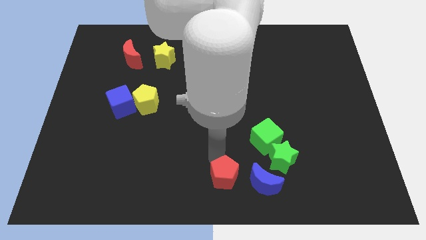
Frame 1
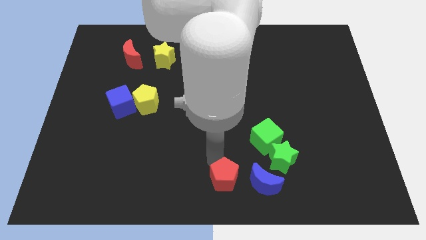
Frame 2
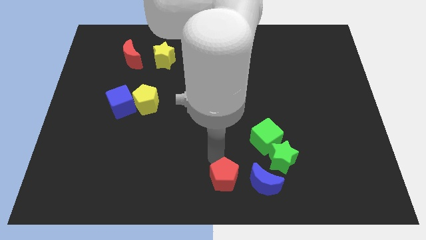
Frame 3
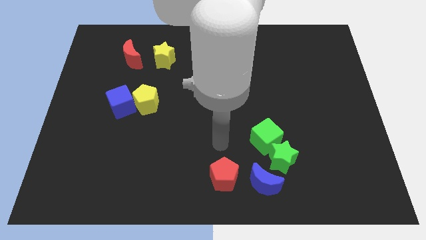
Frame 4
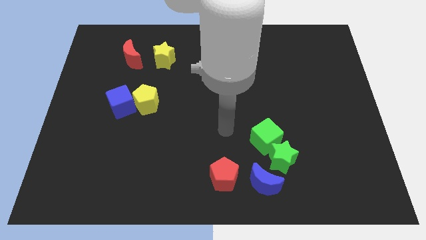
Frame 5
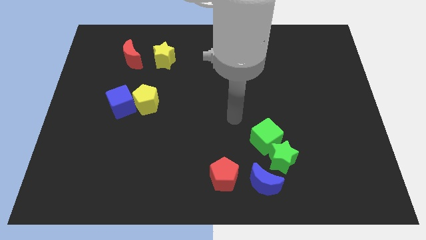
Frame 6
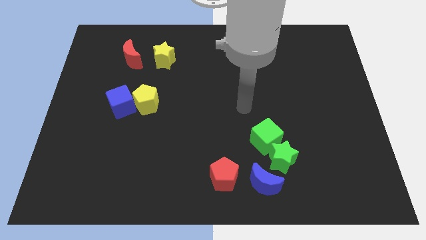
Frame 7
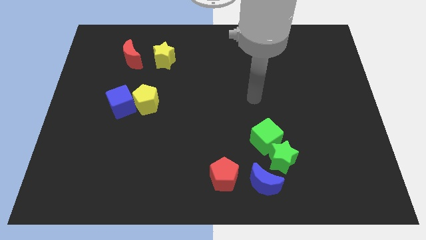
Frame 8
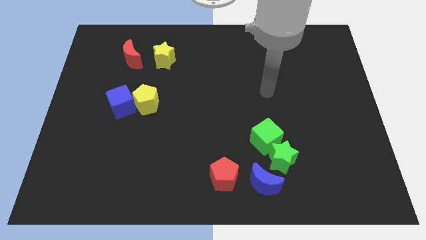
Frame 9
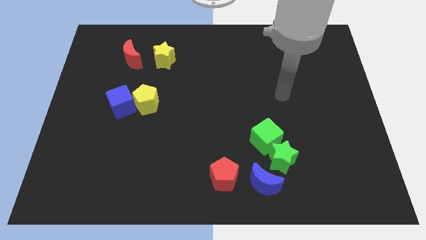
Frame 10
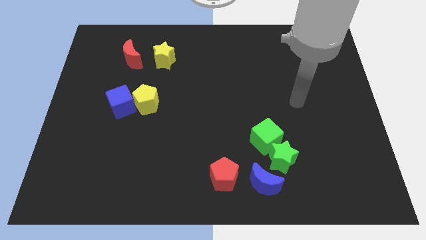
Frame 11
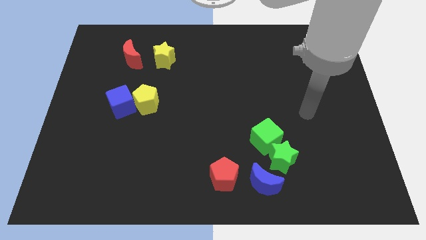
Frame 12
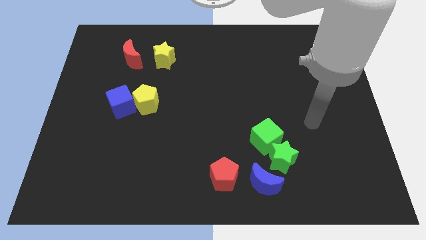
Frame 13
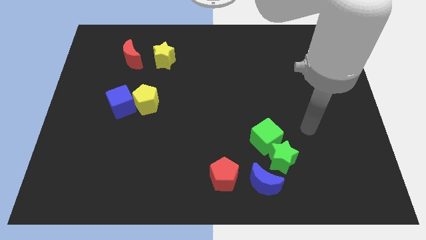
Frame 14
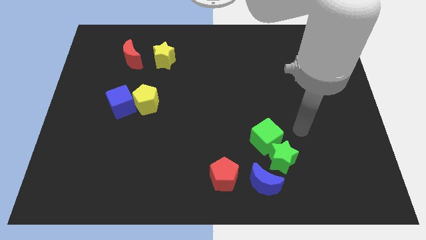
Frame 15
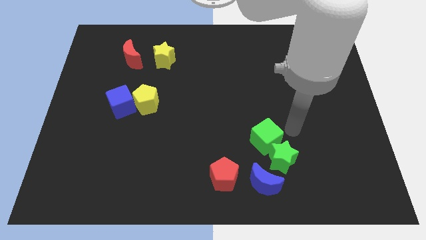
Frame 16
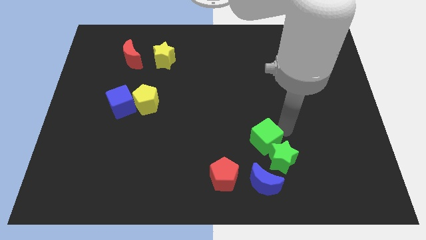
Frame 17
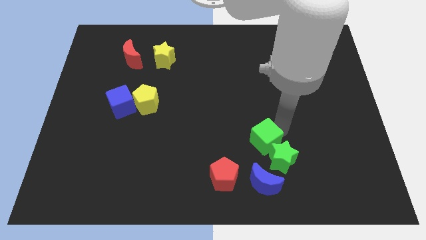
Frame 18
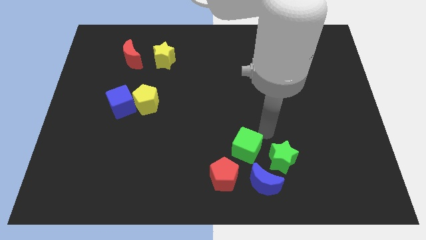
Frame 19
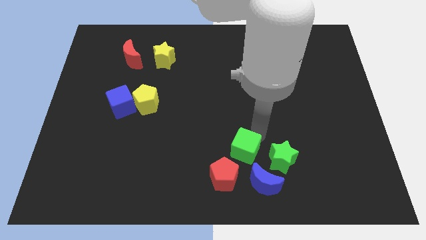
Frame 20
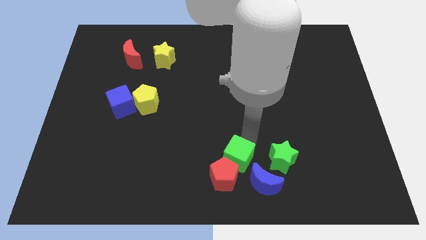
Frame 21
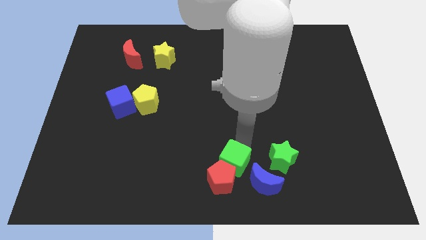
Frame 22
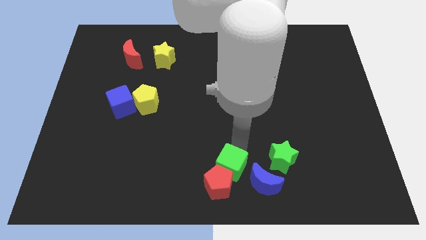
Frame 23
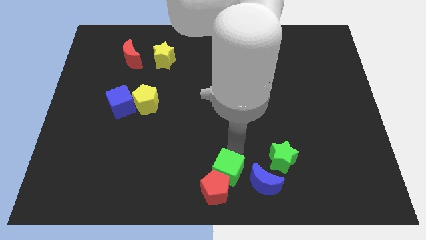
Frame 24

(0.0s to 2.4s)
push the green cube into the red pentgaon

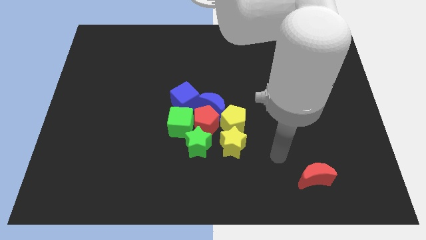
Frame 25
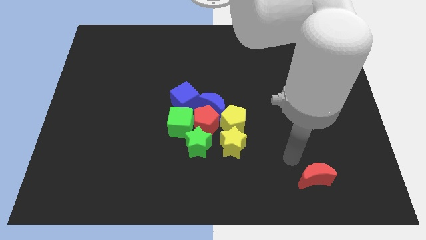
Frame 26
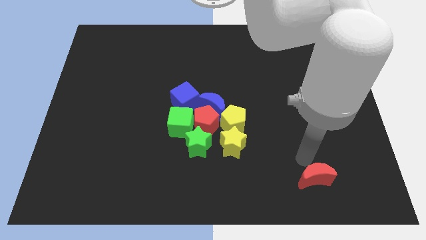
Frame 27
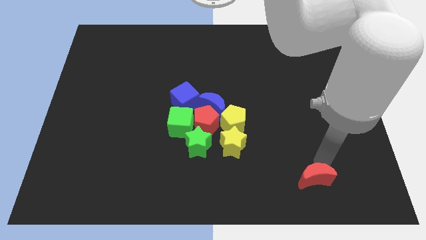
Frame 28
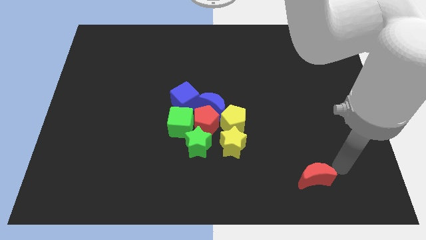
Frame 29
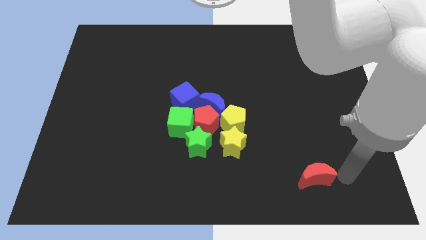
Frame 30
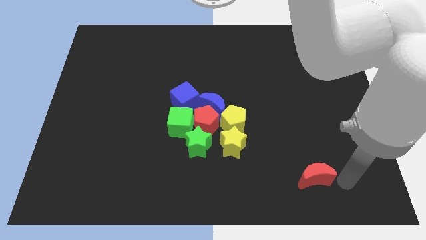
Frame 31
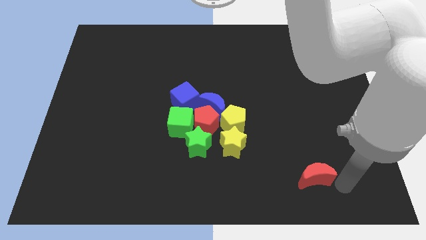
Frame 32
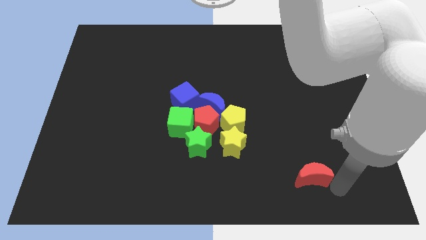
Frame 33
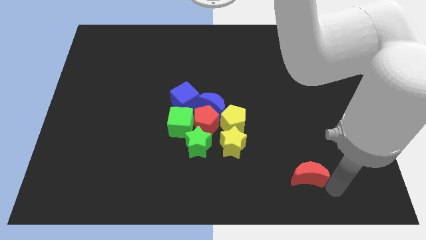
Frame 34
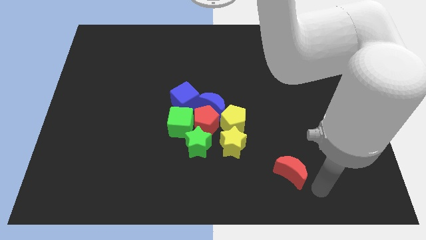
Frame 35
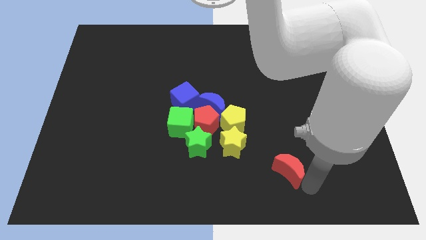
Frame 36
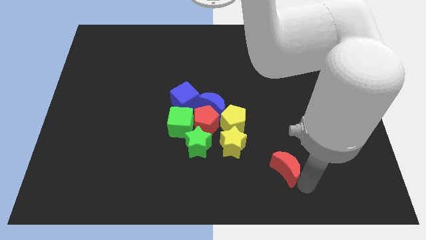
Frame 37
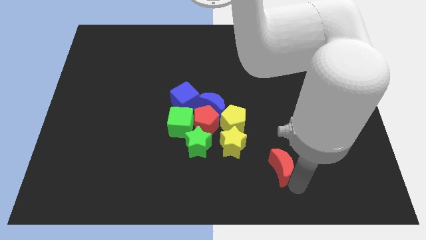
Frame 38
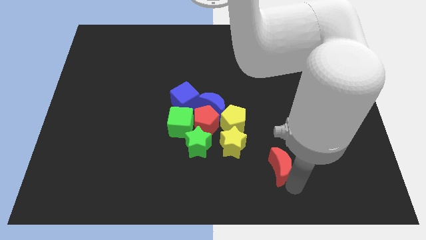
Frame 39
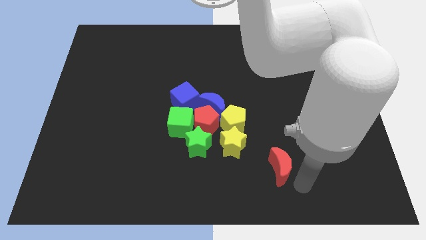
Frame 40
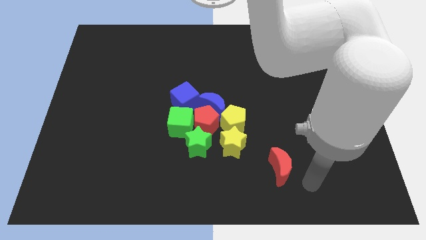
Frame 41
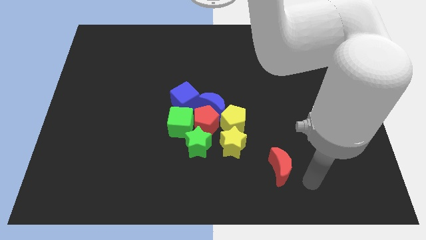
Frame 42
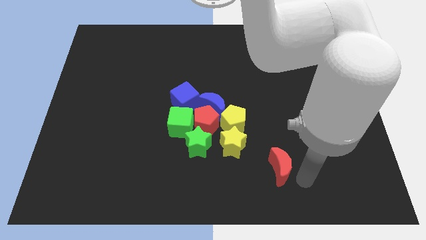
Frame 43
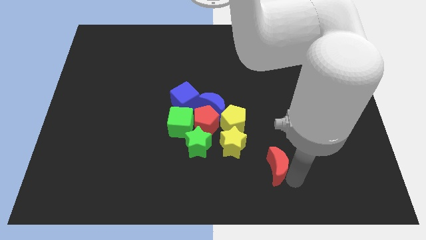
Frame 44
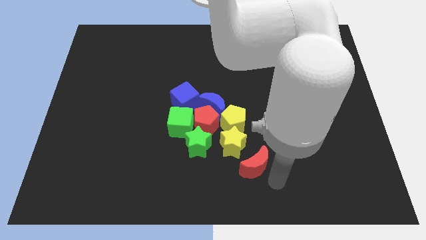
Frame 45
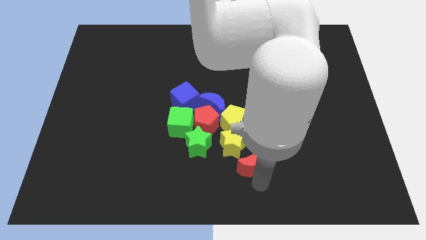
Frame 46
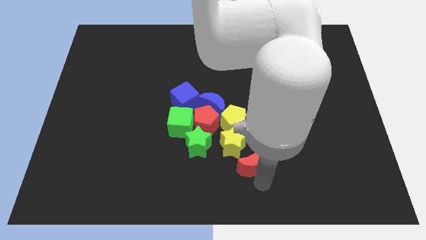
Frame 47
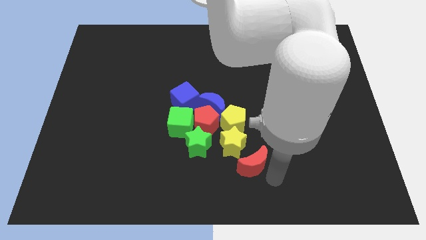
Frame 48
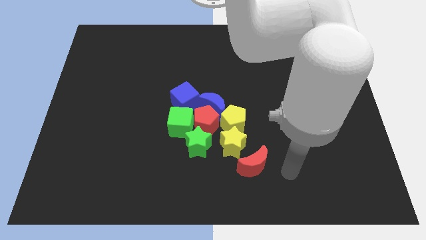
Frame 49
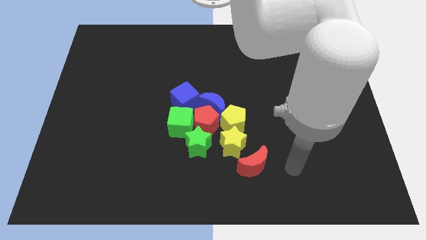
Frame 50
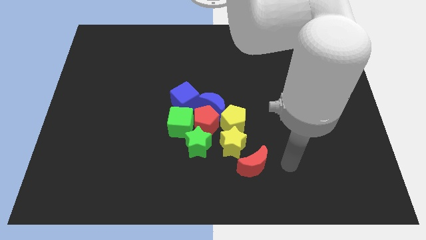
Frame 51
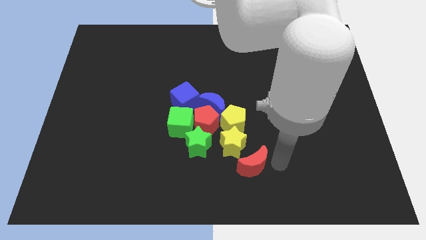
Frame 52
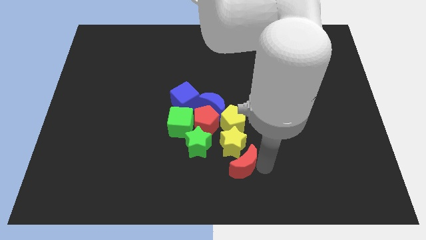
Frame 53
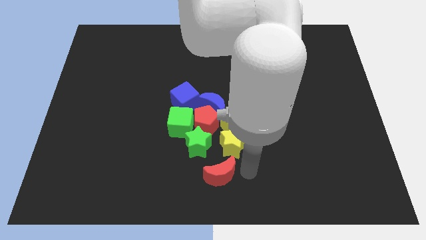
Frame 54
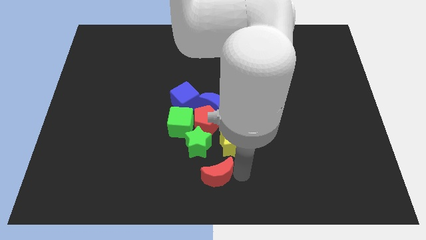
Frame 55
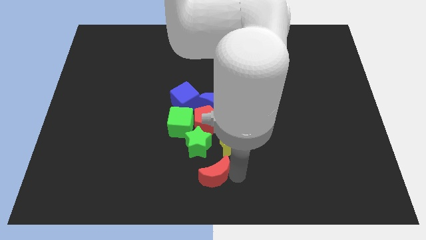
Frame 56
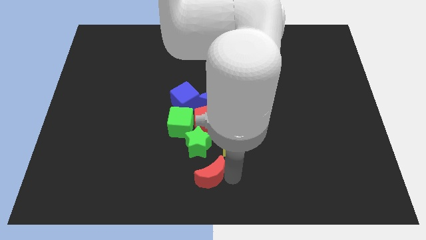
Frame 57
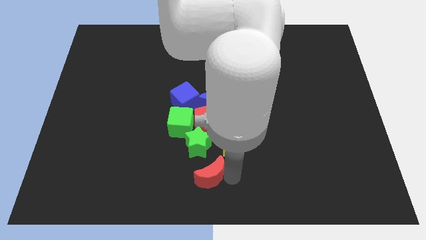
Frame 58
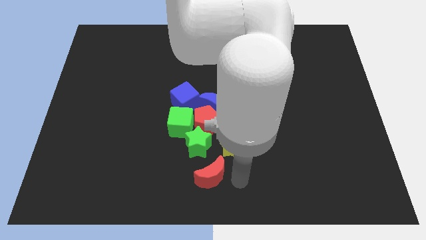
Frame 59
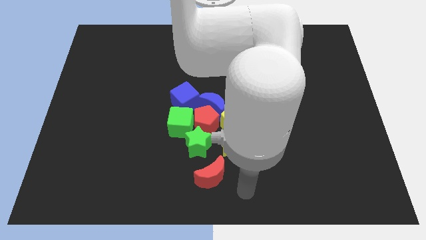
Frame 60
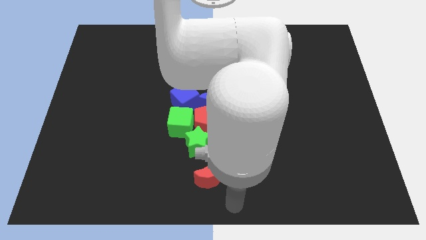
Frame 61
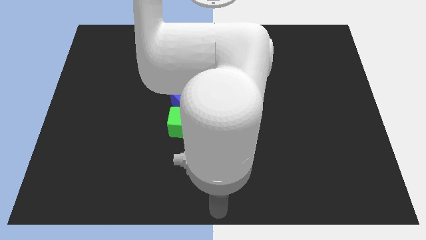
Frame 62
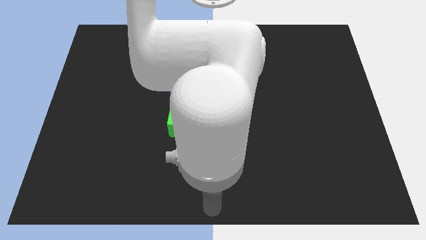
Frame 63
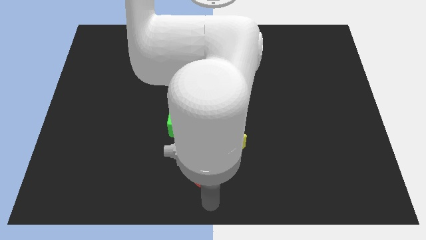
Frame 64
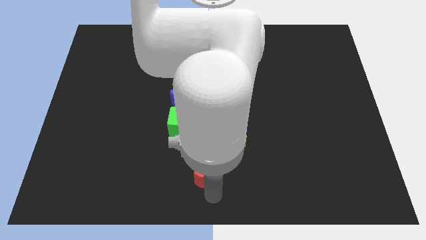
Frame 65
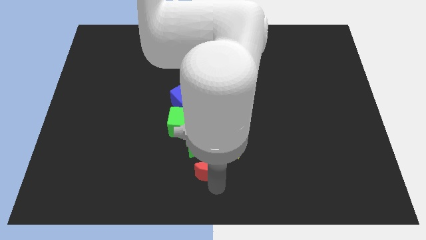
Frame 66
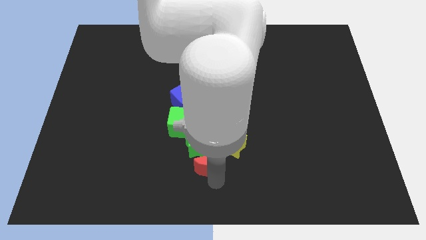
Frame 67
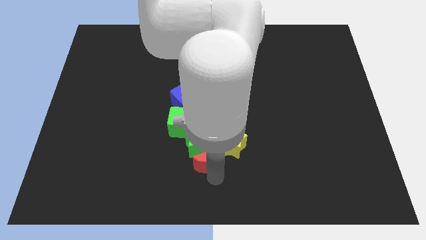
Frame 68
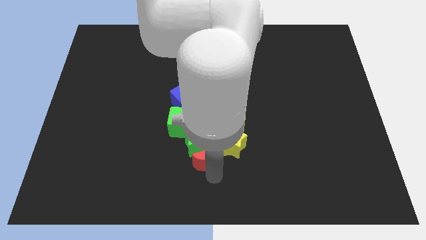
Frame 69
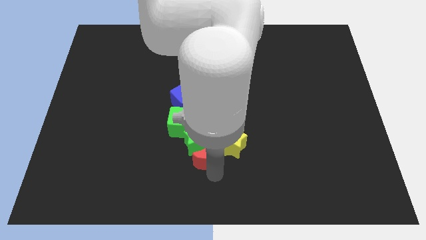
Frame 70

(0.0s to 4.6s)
slide the red moon into the bottom side of the green star

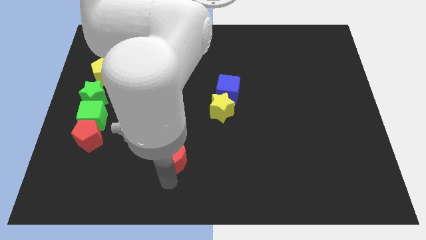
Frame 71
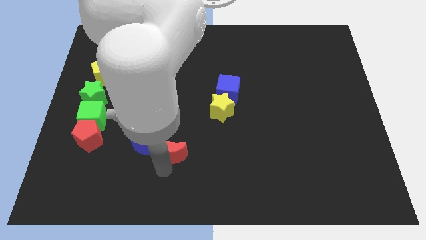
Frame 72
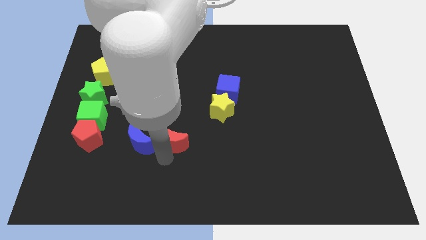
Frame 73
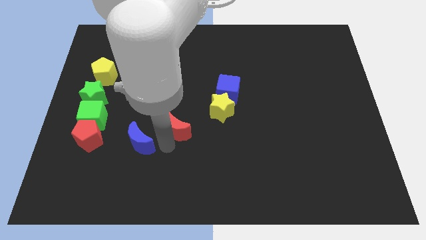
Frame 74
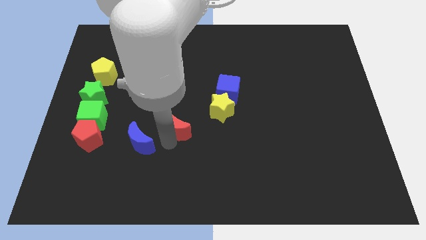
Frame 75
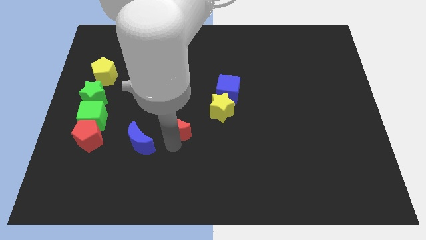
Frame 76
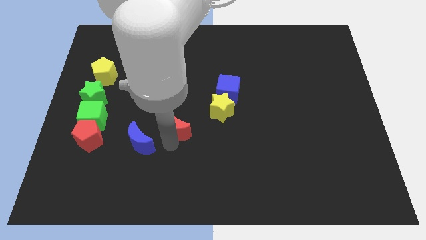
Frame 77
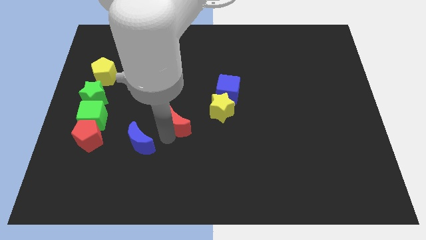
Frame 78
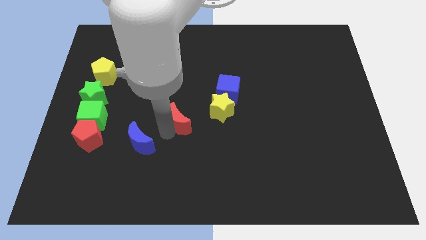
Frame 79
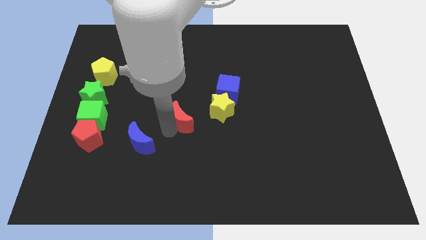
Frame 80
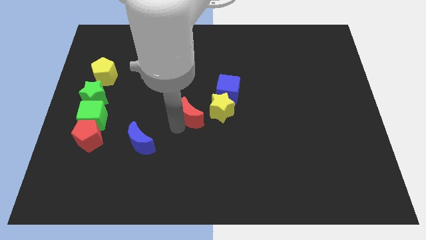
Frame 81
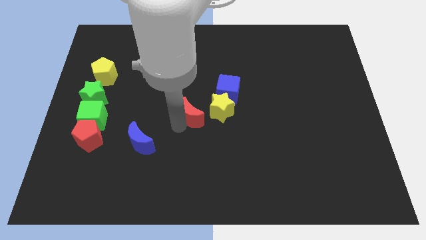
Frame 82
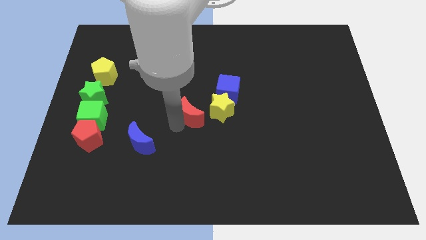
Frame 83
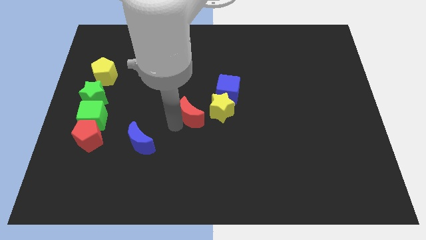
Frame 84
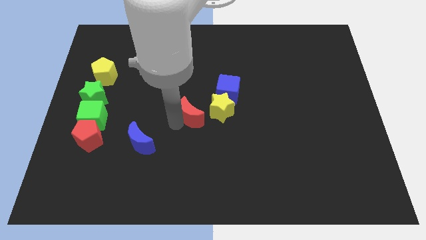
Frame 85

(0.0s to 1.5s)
place red moon to the left of the yellow star

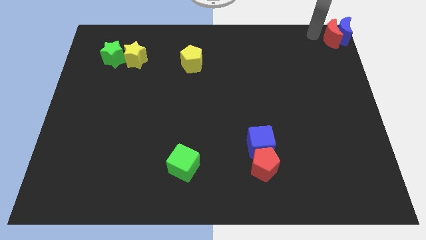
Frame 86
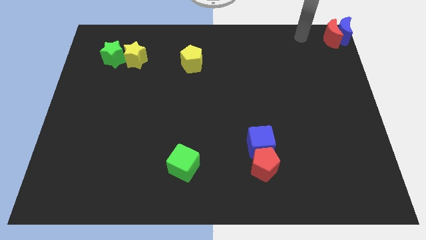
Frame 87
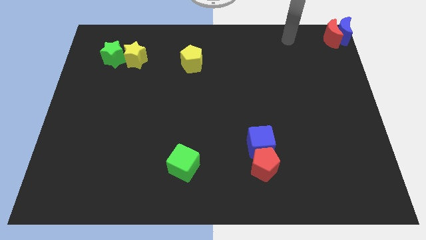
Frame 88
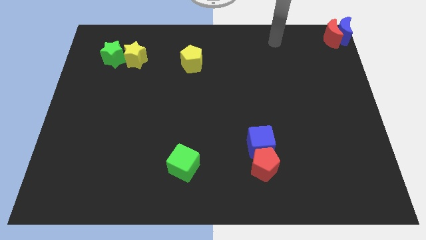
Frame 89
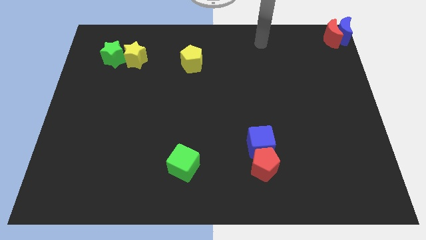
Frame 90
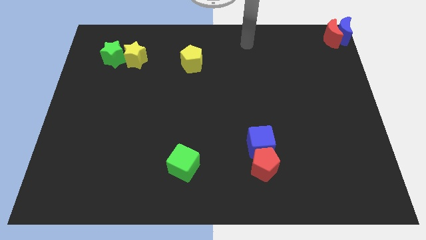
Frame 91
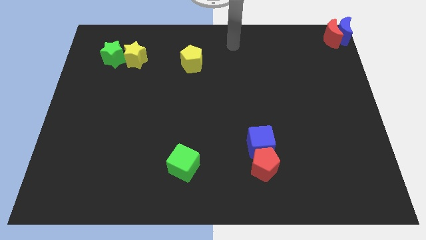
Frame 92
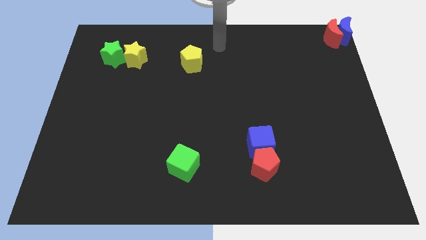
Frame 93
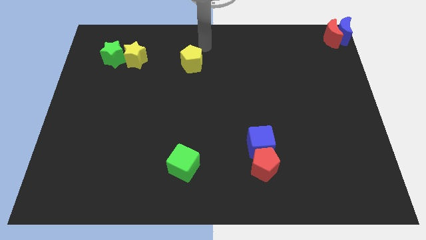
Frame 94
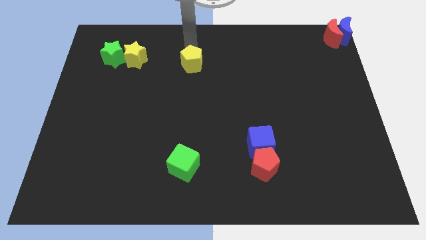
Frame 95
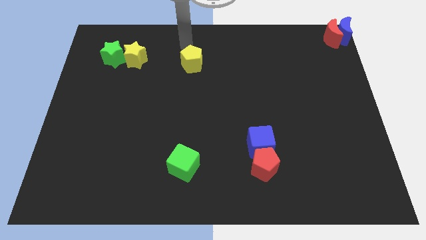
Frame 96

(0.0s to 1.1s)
move your arm away from red moon
